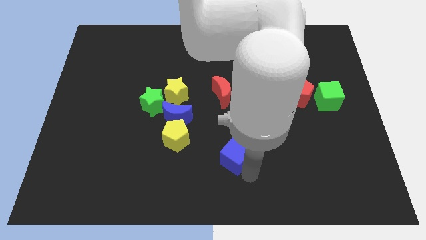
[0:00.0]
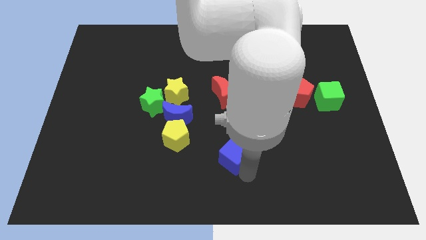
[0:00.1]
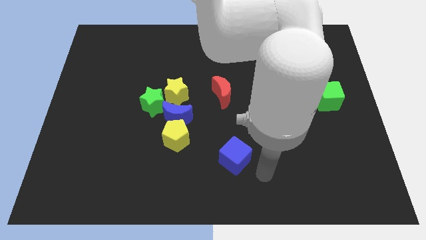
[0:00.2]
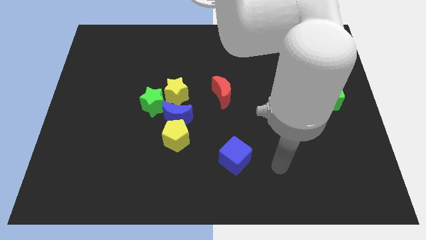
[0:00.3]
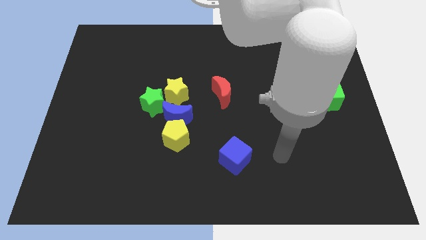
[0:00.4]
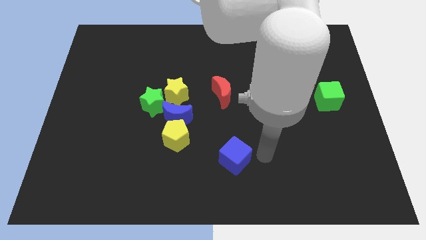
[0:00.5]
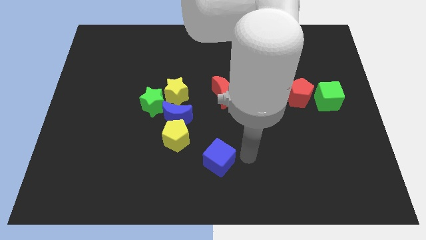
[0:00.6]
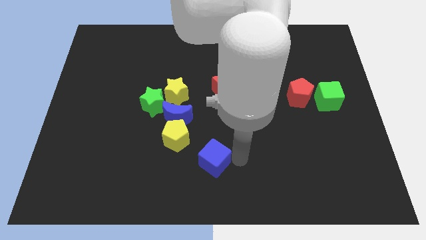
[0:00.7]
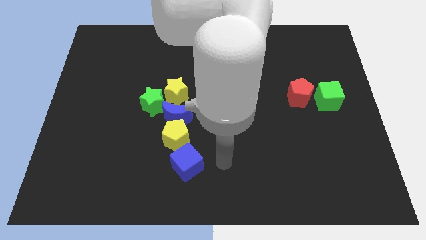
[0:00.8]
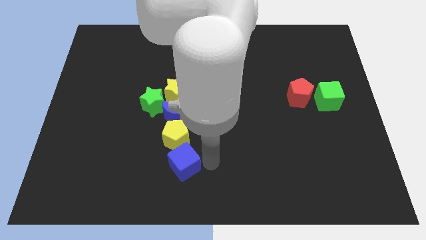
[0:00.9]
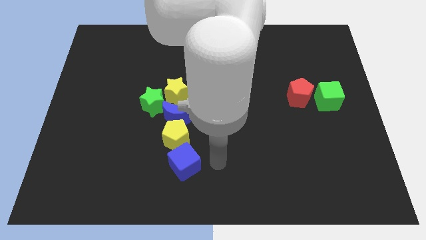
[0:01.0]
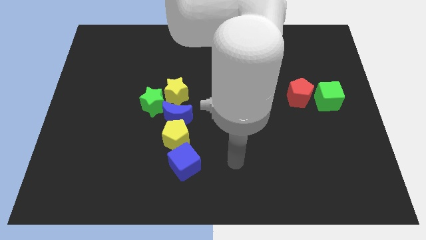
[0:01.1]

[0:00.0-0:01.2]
place blue cube below yellow pentagon

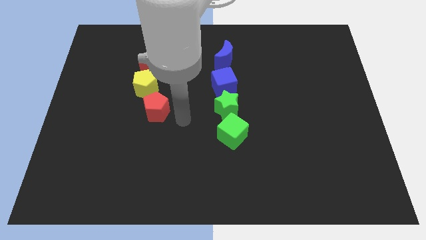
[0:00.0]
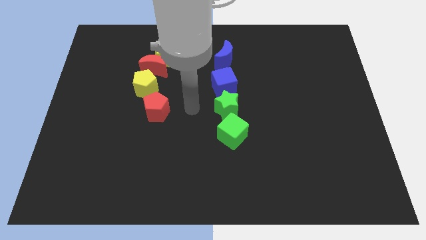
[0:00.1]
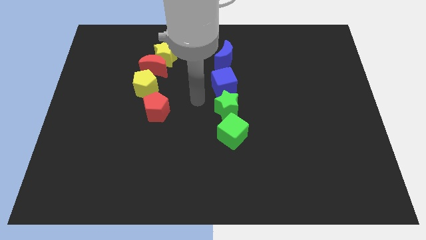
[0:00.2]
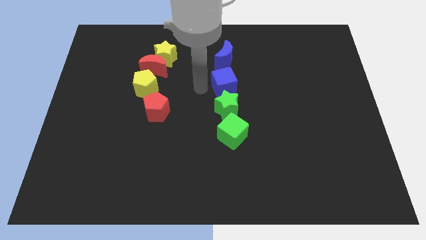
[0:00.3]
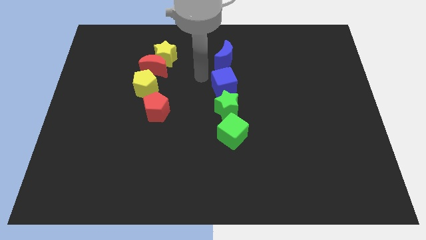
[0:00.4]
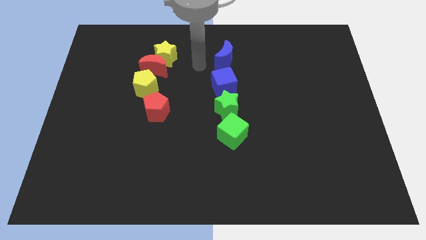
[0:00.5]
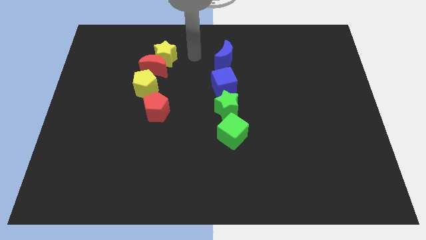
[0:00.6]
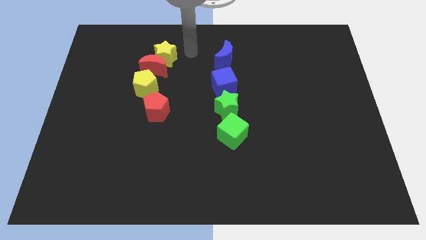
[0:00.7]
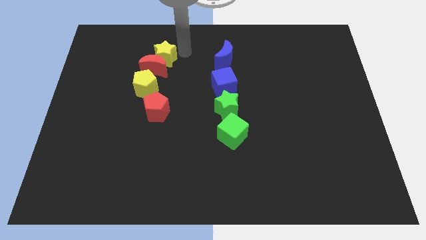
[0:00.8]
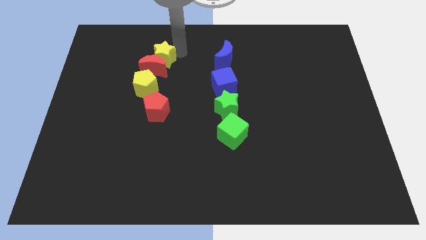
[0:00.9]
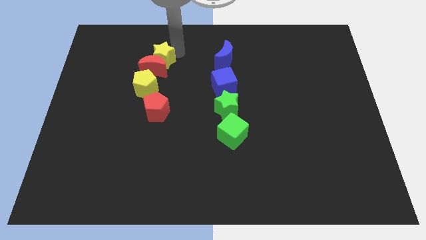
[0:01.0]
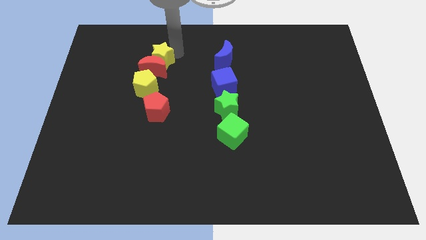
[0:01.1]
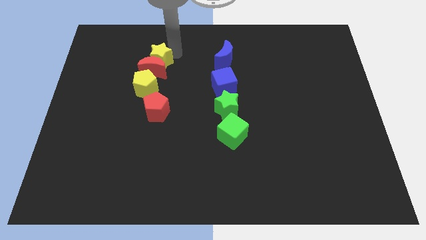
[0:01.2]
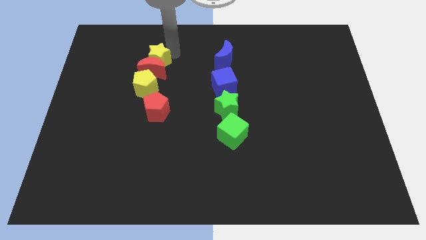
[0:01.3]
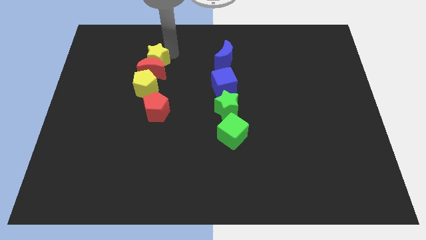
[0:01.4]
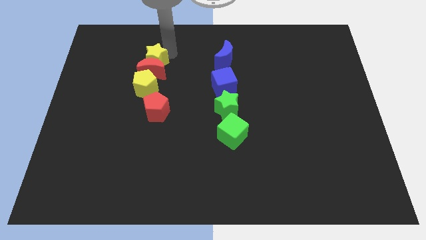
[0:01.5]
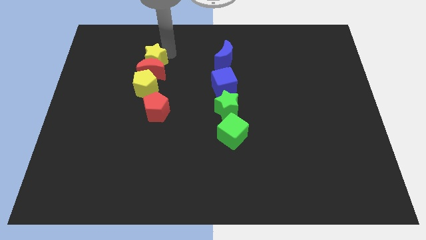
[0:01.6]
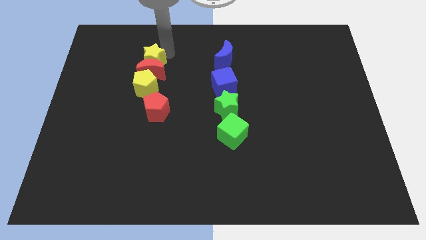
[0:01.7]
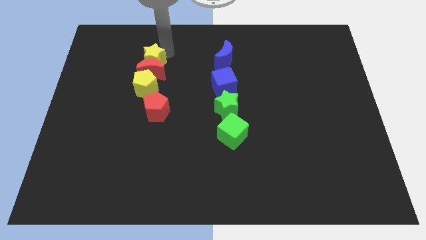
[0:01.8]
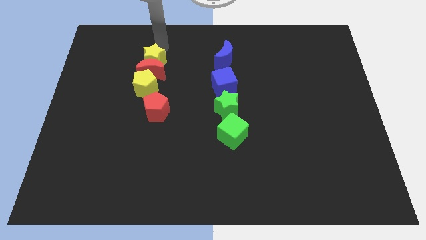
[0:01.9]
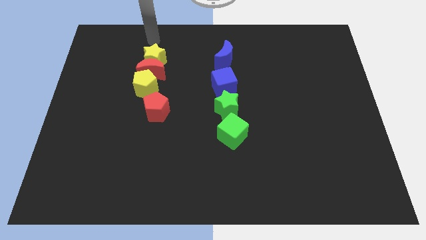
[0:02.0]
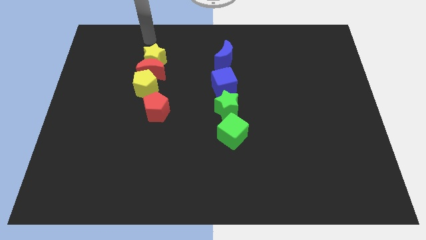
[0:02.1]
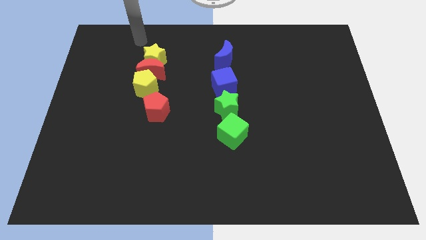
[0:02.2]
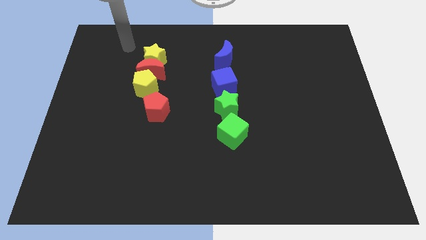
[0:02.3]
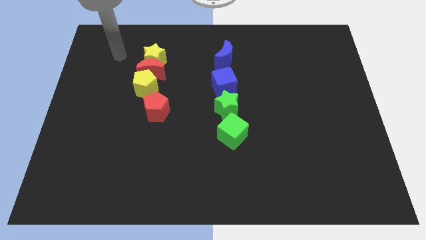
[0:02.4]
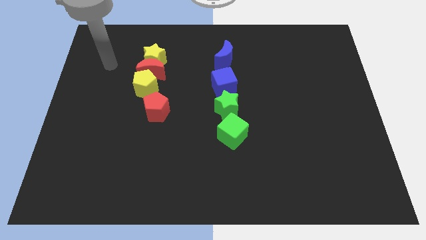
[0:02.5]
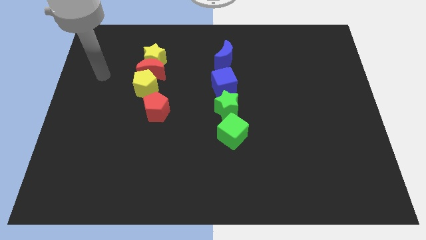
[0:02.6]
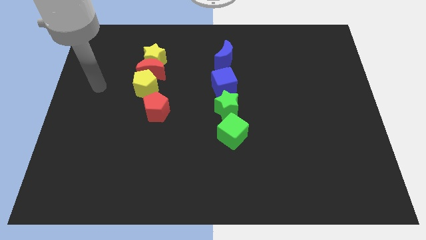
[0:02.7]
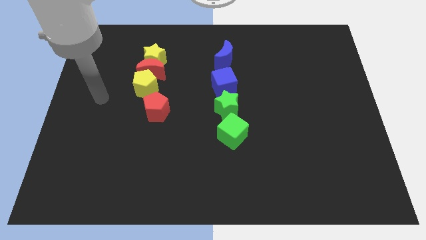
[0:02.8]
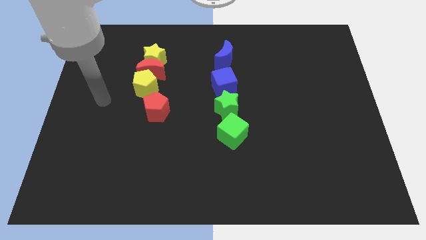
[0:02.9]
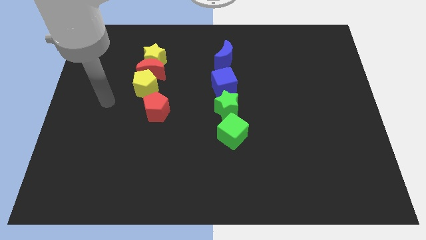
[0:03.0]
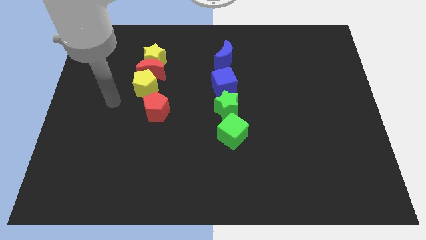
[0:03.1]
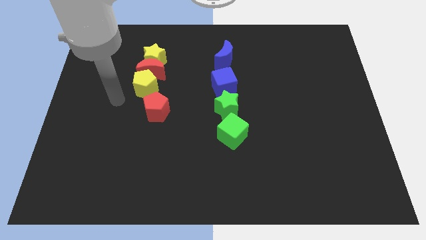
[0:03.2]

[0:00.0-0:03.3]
push the yellow star above the red crescent

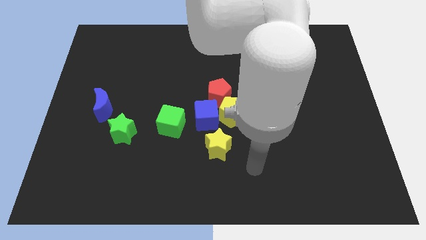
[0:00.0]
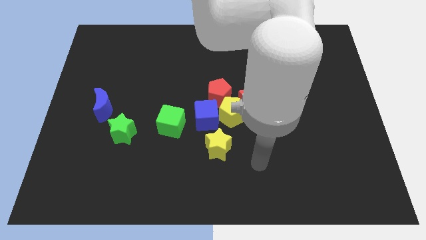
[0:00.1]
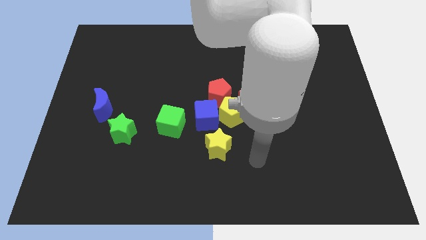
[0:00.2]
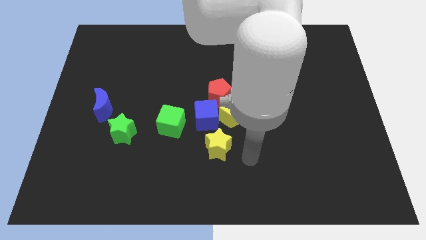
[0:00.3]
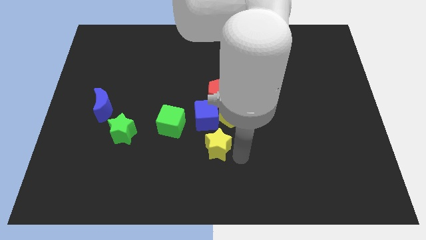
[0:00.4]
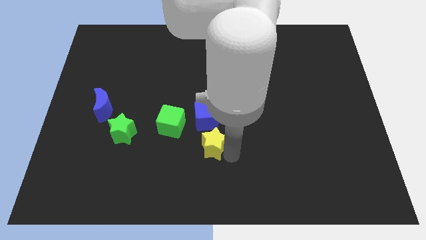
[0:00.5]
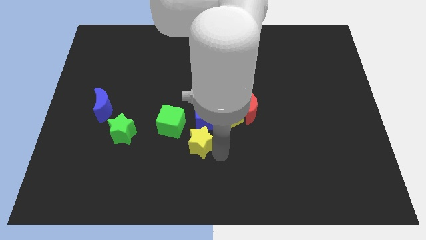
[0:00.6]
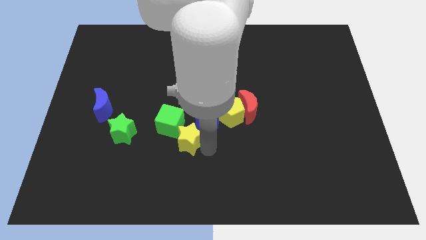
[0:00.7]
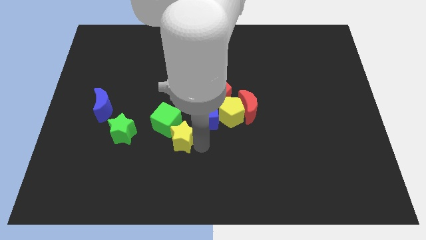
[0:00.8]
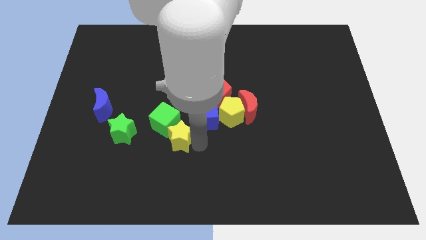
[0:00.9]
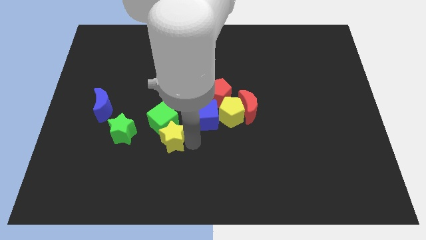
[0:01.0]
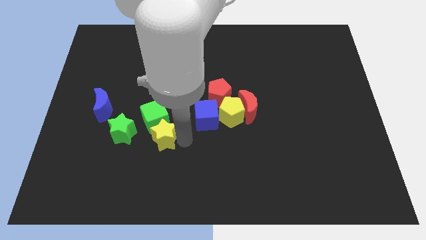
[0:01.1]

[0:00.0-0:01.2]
move the yellow star into the green cube

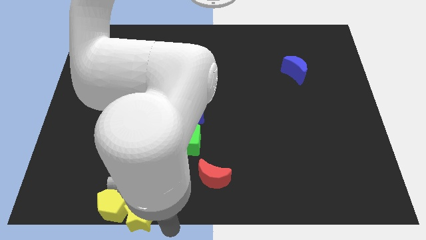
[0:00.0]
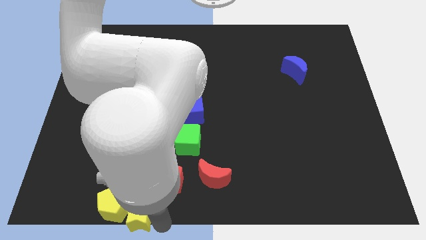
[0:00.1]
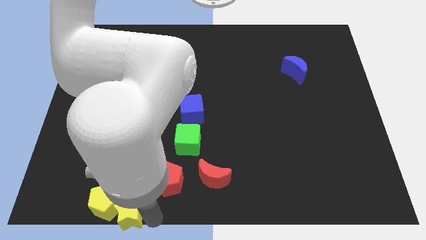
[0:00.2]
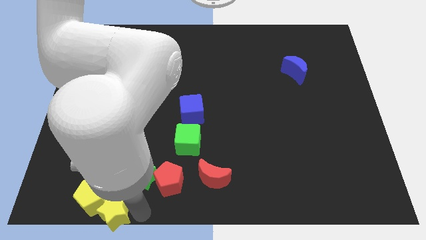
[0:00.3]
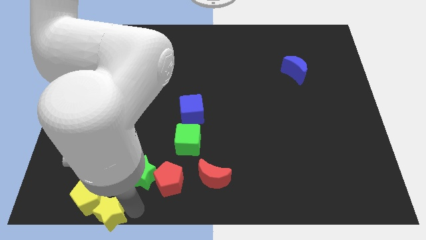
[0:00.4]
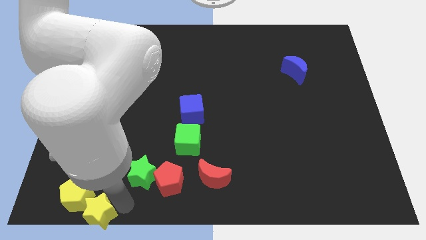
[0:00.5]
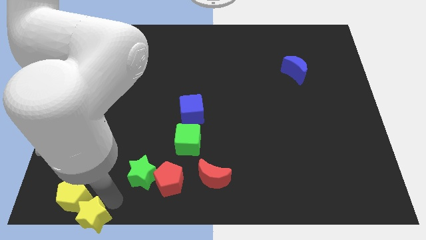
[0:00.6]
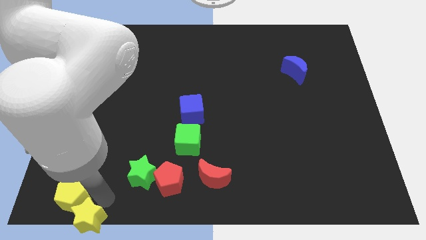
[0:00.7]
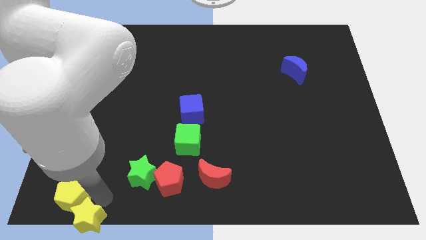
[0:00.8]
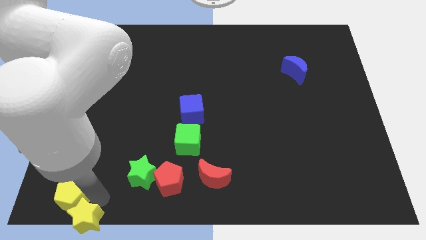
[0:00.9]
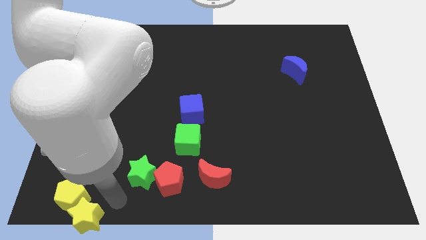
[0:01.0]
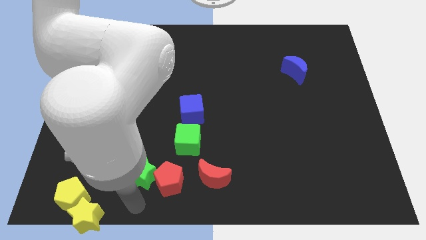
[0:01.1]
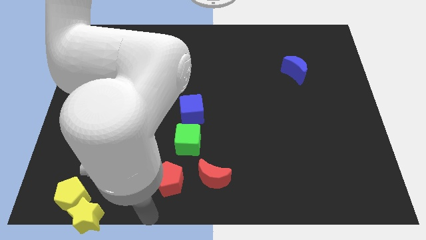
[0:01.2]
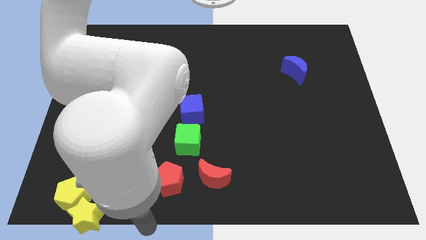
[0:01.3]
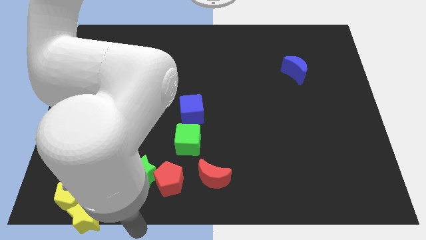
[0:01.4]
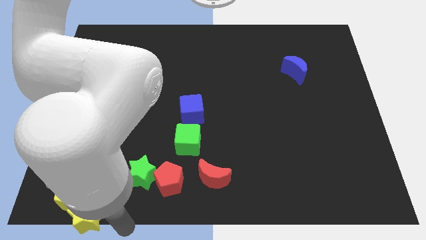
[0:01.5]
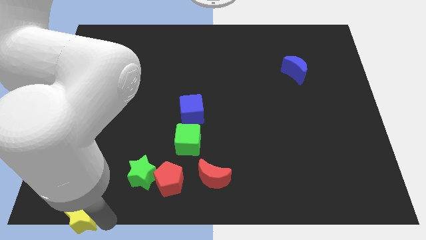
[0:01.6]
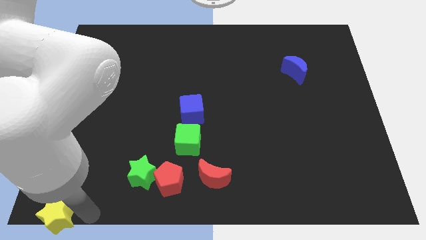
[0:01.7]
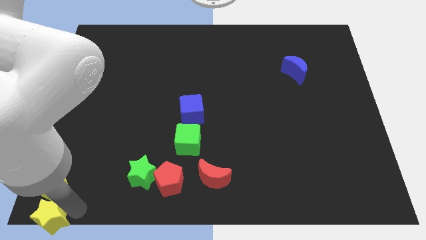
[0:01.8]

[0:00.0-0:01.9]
push the yellow blocks towards the left side of the board

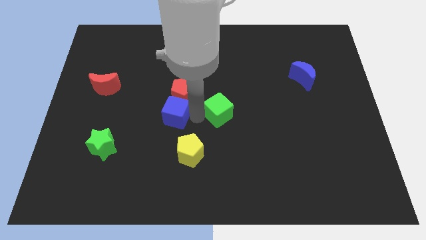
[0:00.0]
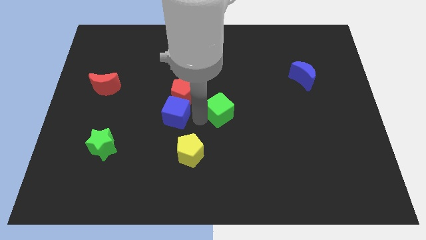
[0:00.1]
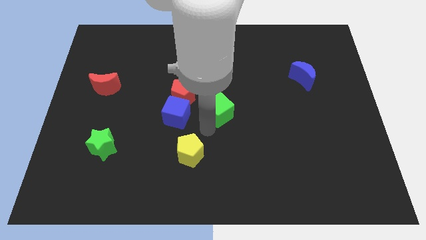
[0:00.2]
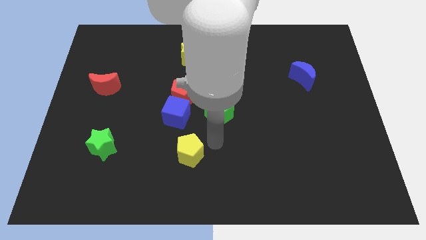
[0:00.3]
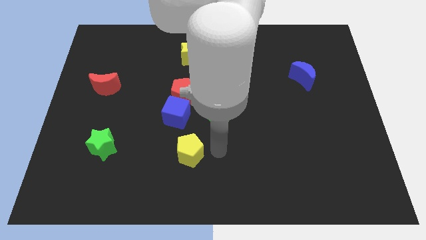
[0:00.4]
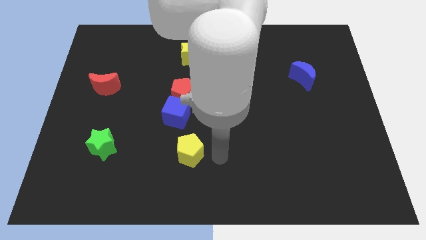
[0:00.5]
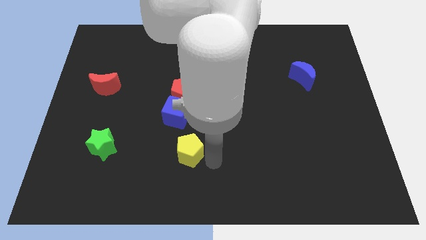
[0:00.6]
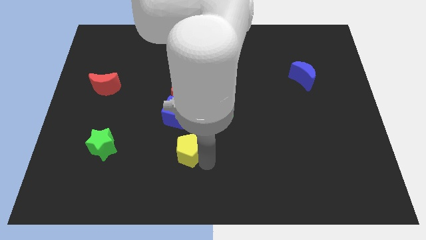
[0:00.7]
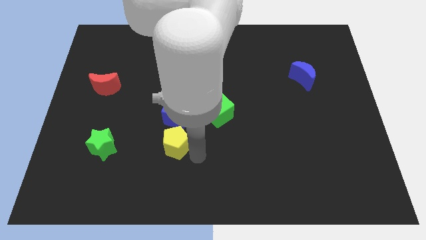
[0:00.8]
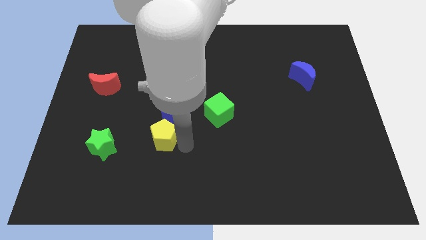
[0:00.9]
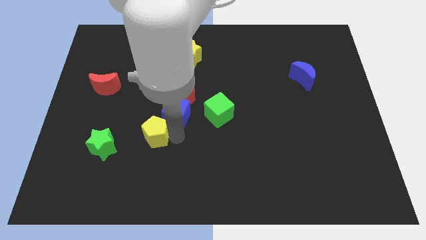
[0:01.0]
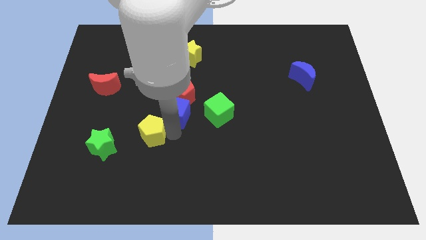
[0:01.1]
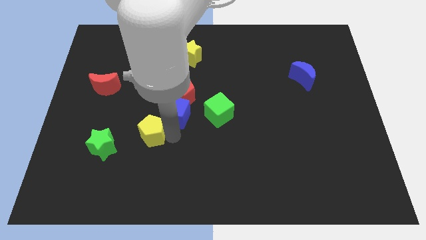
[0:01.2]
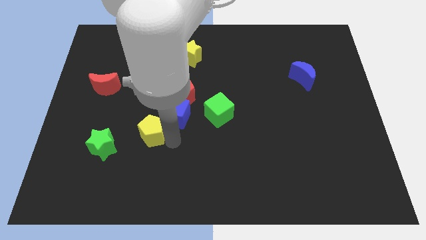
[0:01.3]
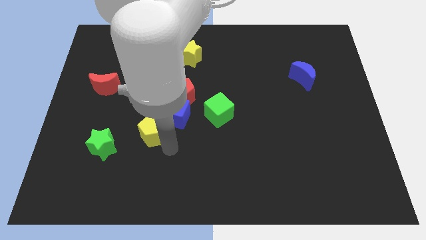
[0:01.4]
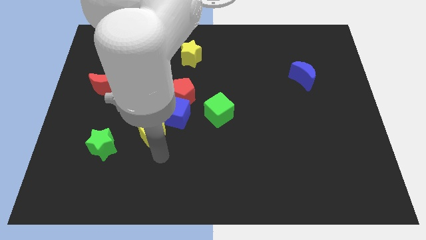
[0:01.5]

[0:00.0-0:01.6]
place the yellow pentagon to the bottom left of the blue cube
